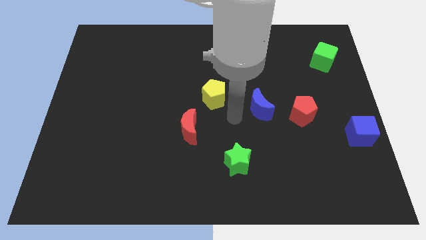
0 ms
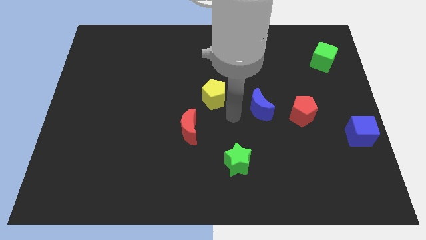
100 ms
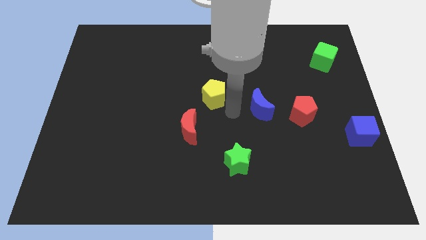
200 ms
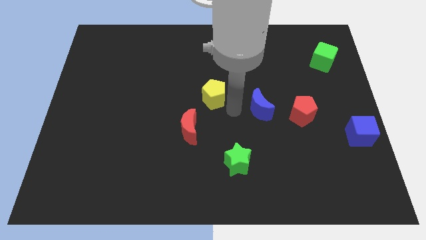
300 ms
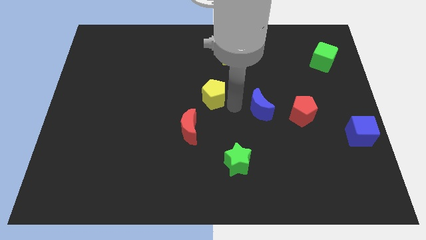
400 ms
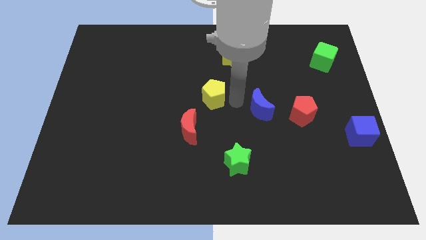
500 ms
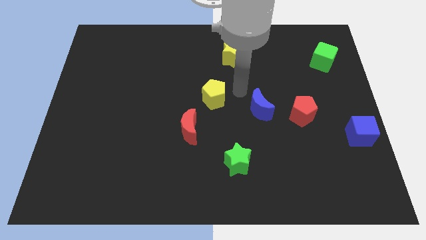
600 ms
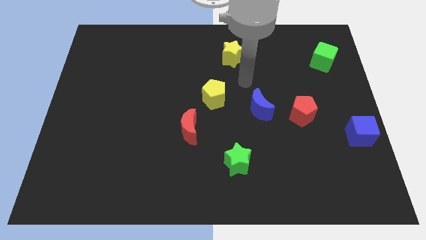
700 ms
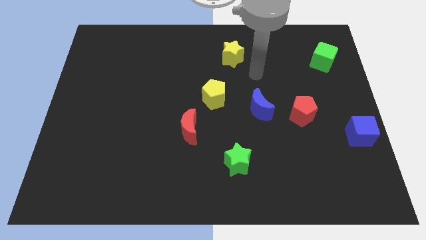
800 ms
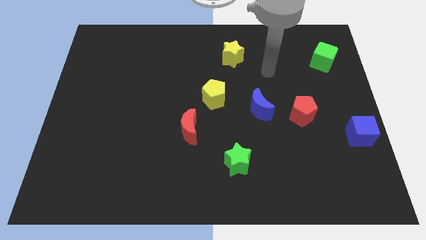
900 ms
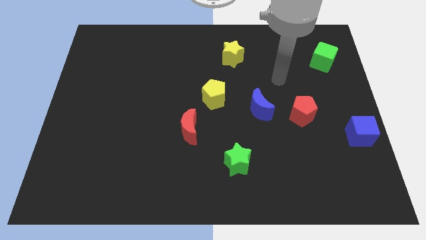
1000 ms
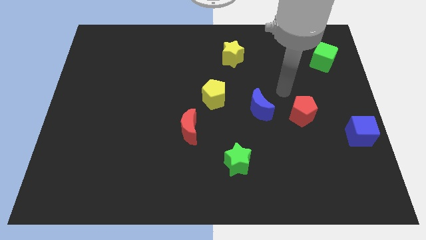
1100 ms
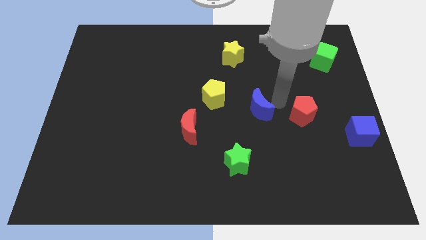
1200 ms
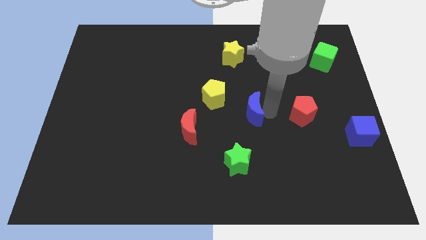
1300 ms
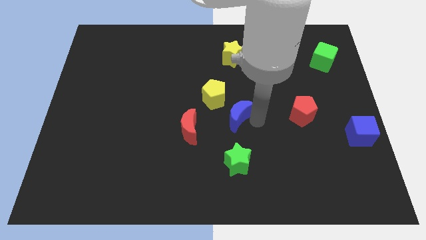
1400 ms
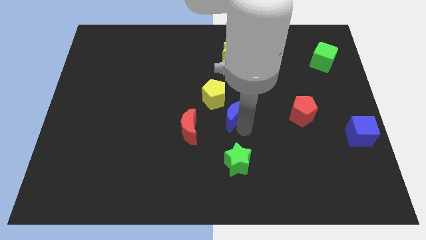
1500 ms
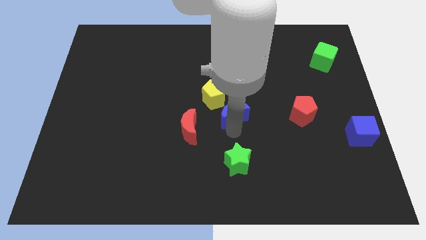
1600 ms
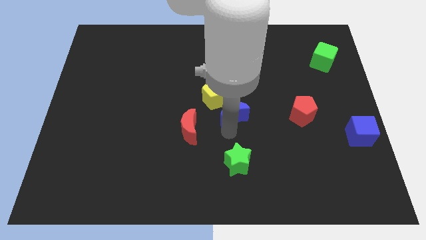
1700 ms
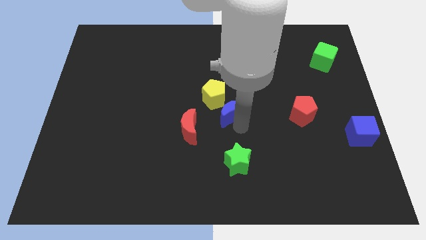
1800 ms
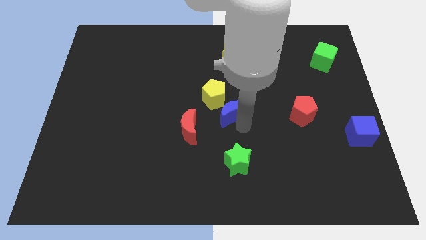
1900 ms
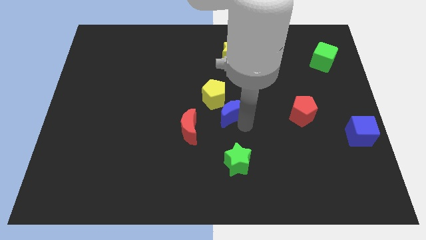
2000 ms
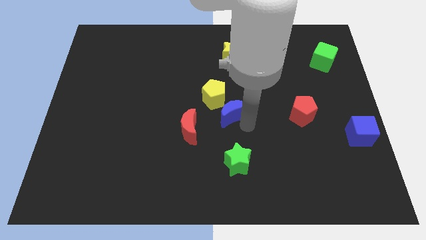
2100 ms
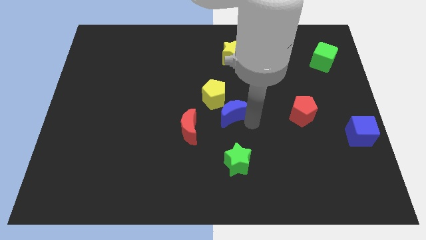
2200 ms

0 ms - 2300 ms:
place the blue crescent close to the yellow pentagon

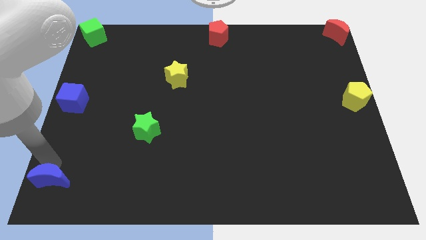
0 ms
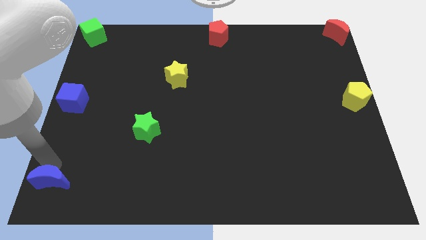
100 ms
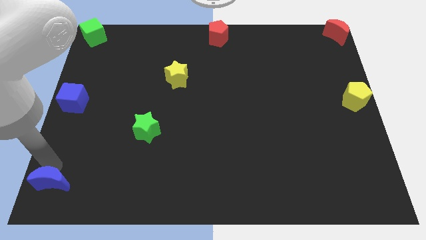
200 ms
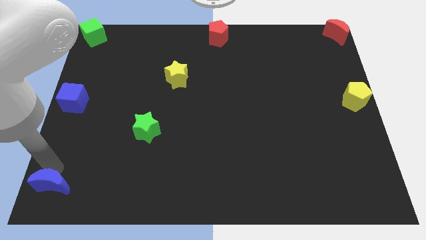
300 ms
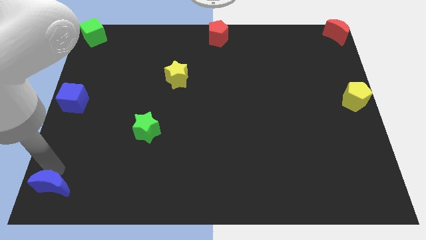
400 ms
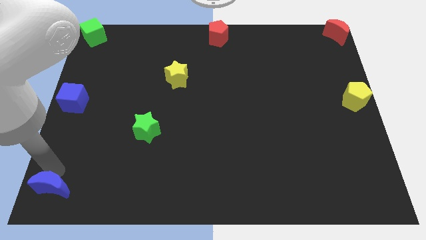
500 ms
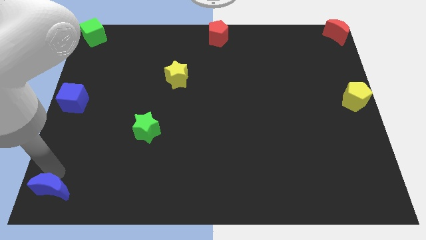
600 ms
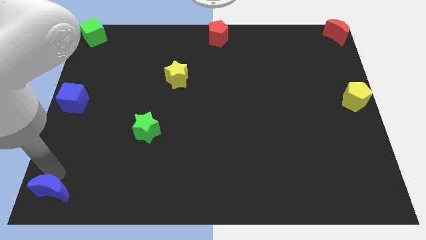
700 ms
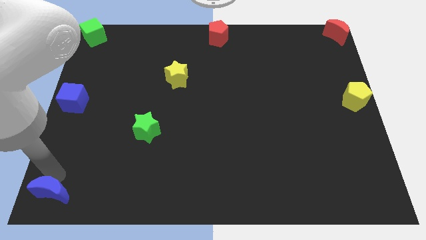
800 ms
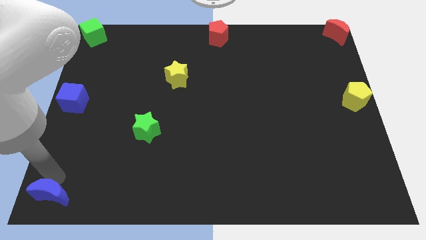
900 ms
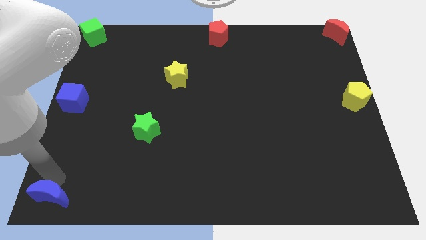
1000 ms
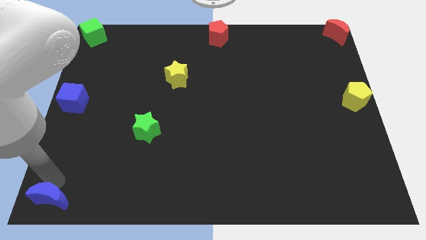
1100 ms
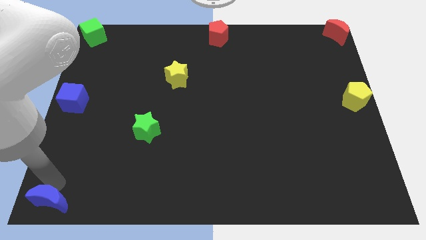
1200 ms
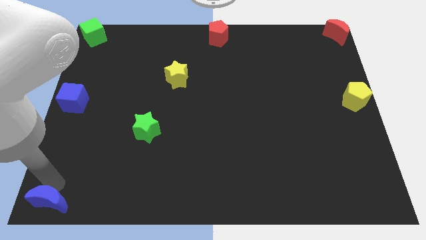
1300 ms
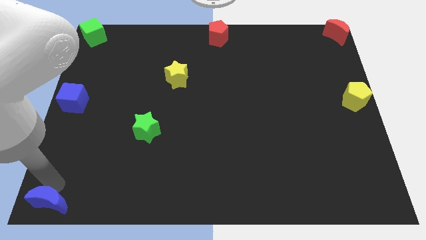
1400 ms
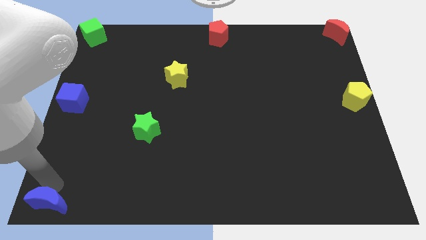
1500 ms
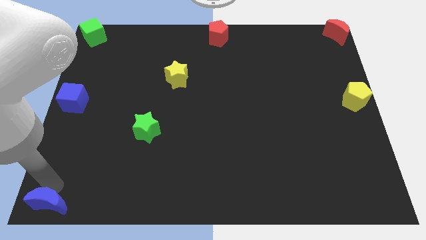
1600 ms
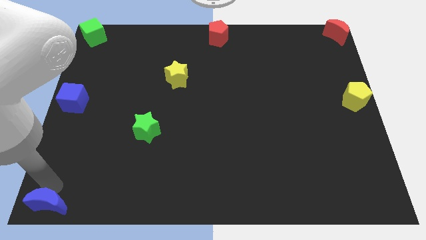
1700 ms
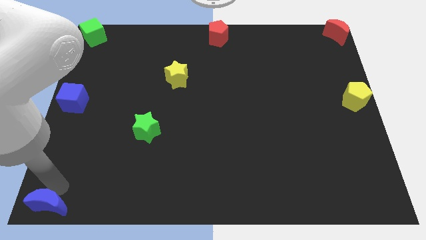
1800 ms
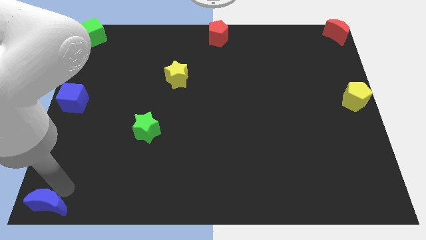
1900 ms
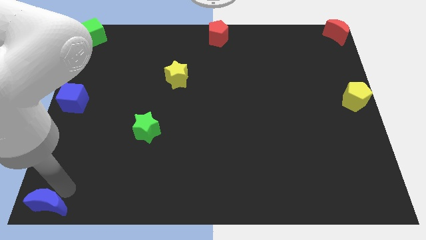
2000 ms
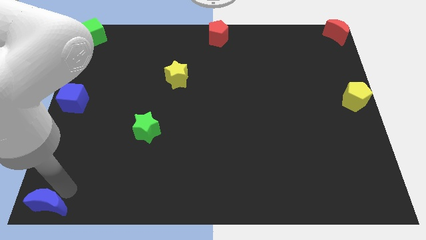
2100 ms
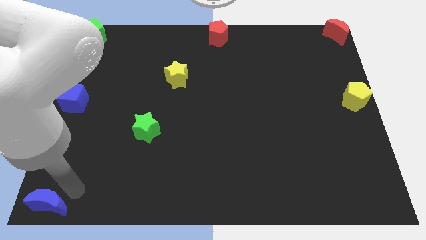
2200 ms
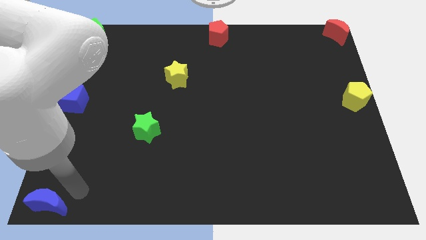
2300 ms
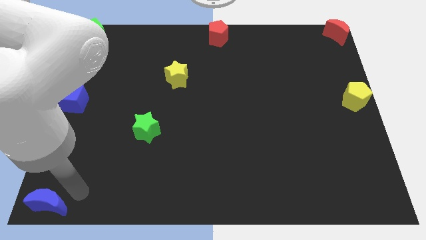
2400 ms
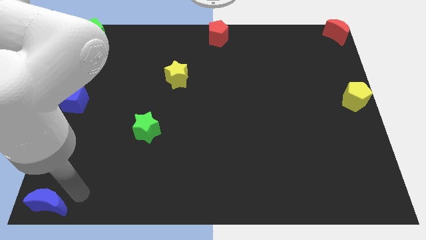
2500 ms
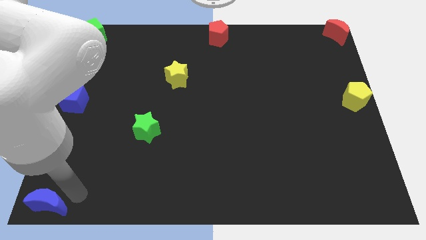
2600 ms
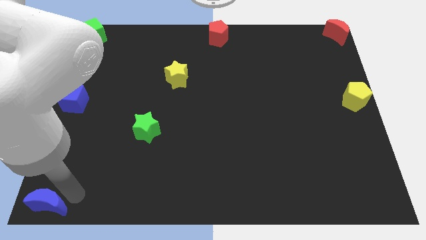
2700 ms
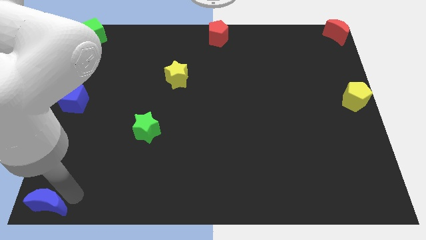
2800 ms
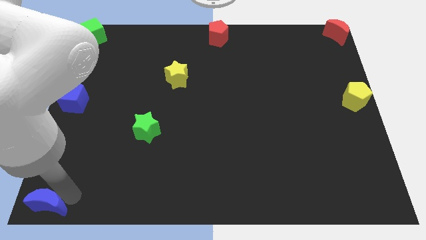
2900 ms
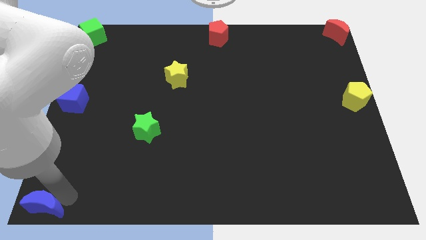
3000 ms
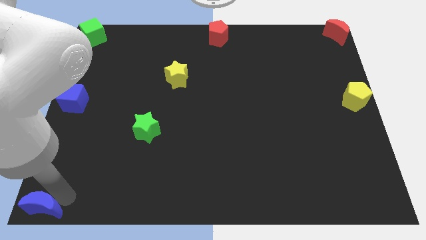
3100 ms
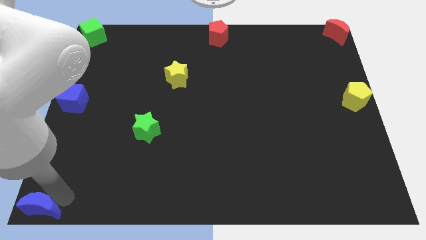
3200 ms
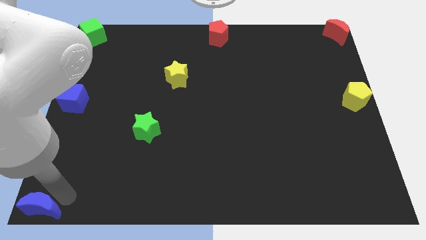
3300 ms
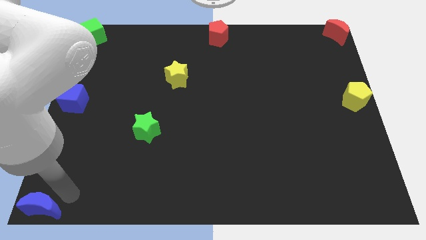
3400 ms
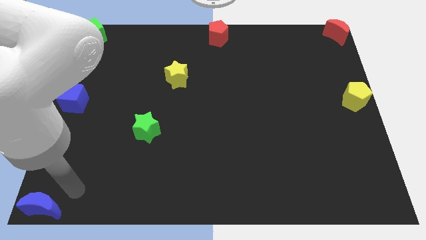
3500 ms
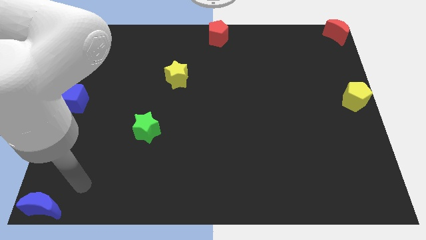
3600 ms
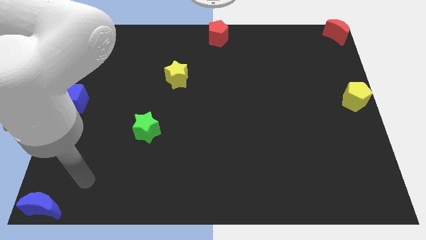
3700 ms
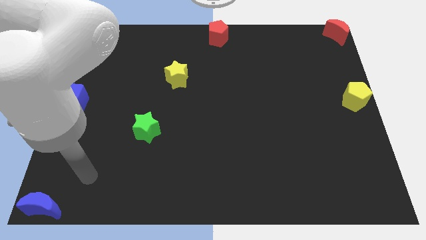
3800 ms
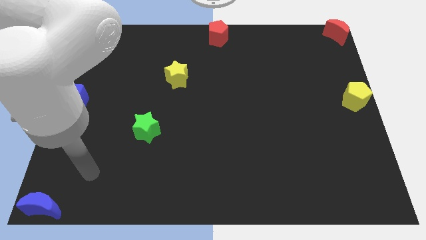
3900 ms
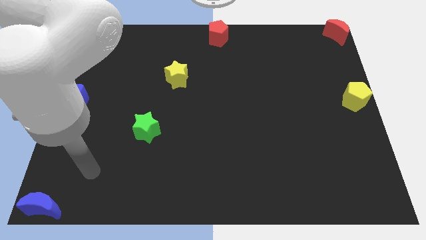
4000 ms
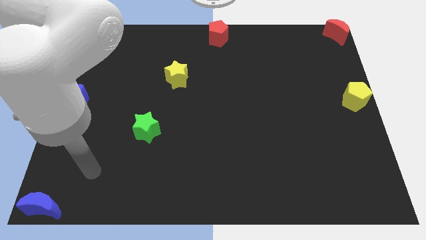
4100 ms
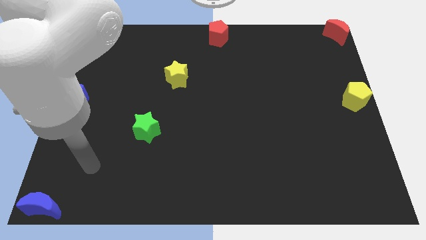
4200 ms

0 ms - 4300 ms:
place the blue crescent towards the bottom left corner of the board

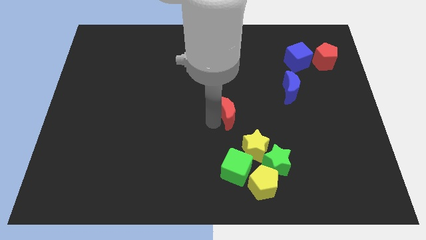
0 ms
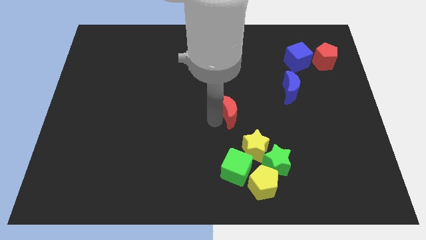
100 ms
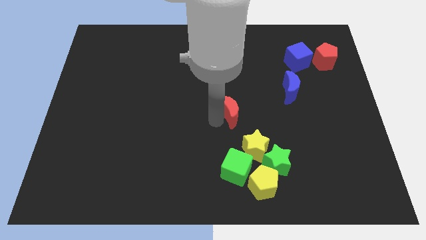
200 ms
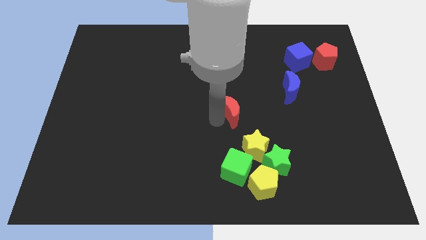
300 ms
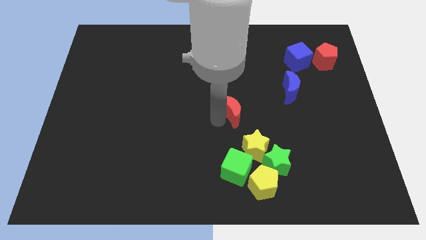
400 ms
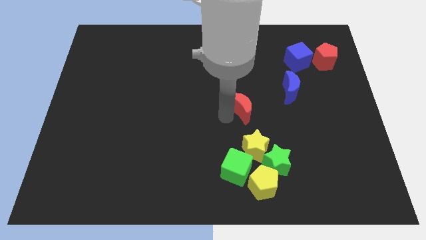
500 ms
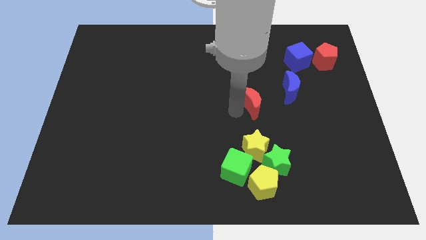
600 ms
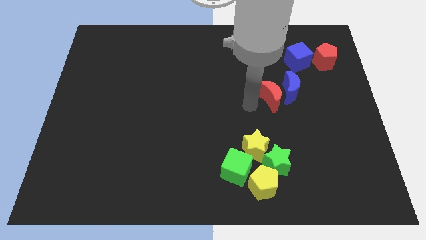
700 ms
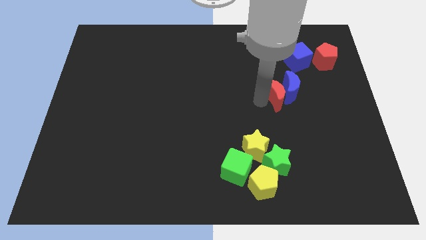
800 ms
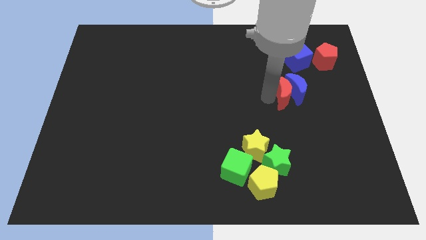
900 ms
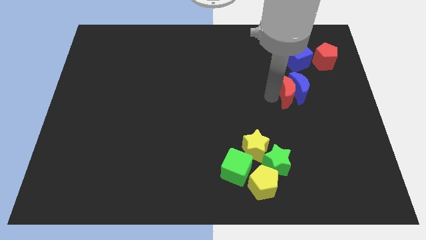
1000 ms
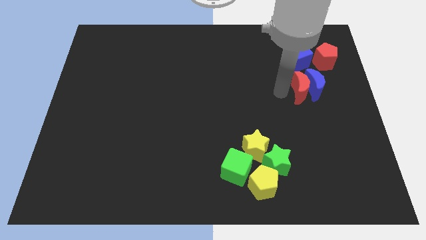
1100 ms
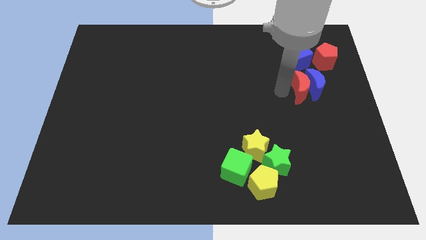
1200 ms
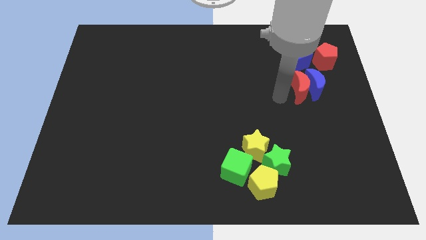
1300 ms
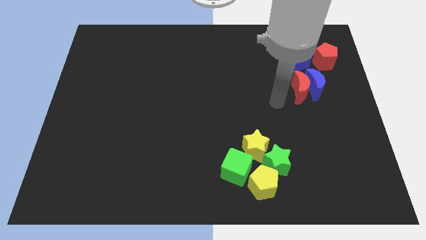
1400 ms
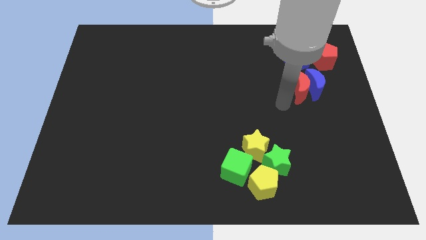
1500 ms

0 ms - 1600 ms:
slide the red moon into the blue crescent

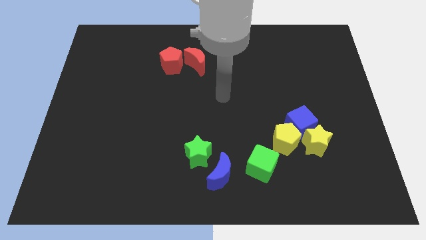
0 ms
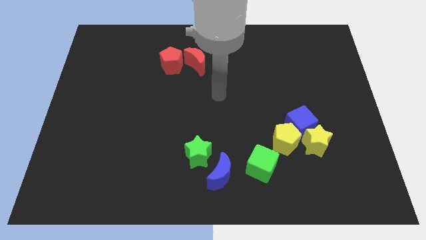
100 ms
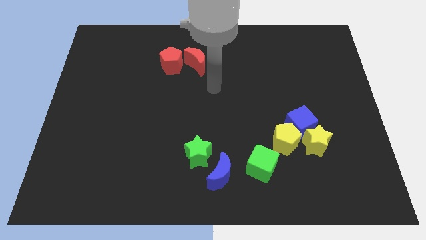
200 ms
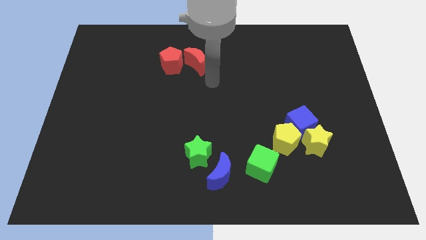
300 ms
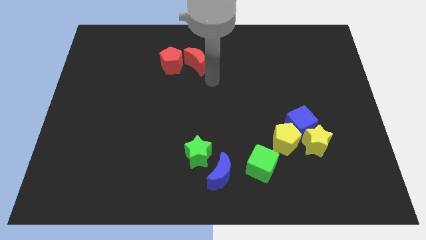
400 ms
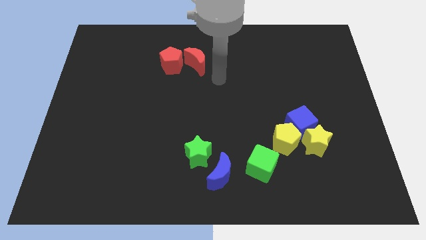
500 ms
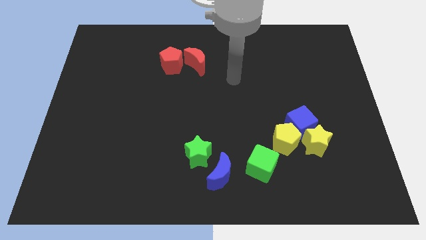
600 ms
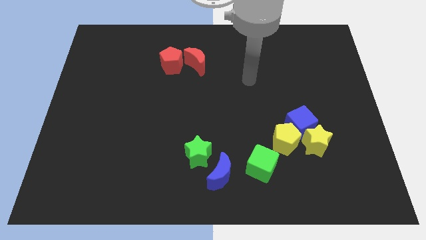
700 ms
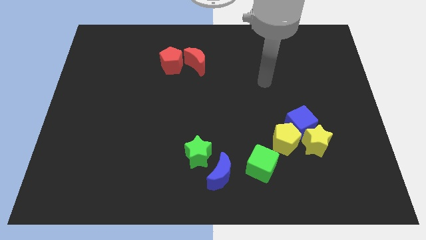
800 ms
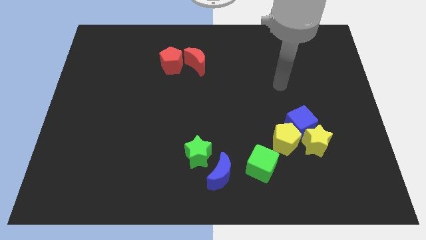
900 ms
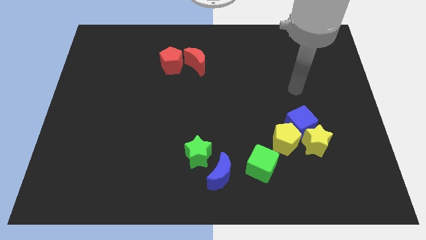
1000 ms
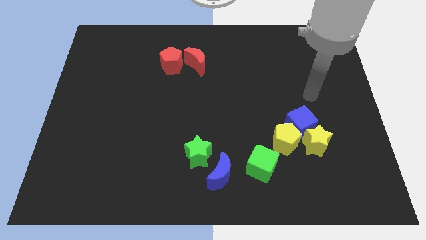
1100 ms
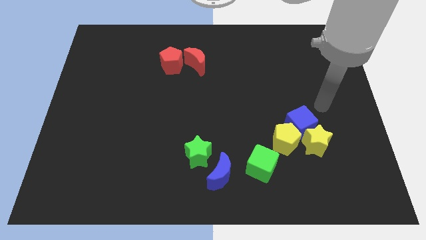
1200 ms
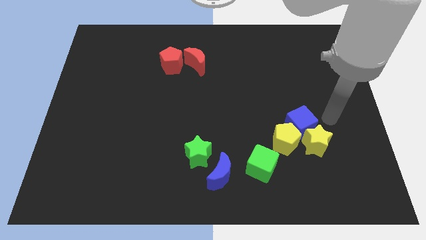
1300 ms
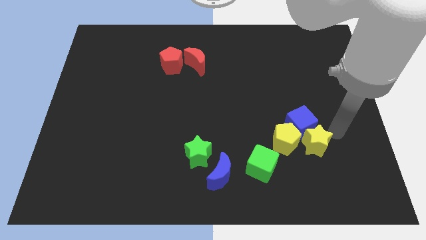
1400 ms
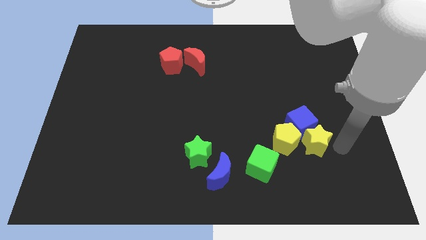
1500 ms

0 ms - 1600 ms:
move the arm towards the yellow star
